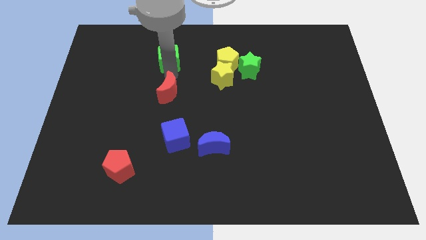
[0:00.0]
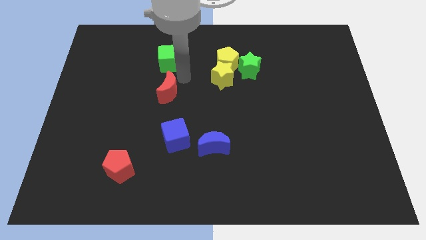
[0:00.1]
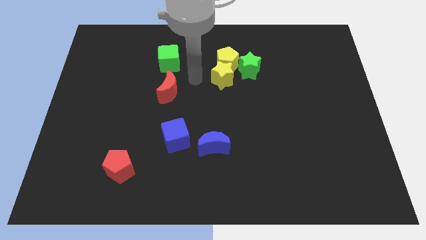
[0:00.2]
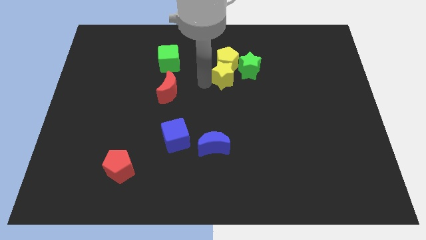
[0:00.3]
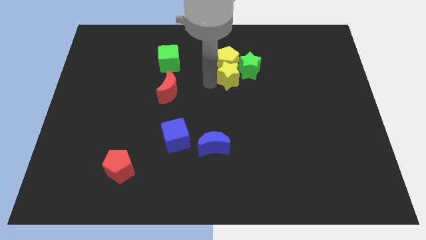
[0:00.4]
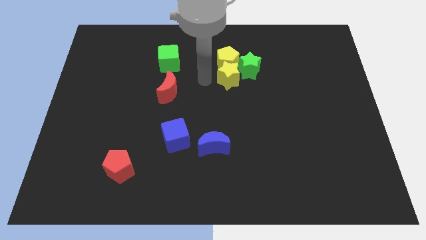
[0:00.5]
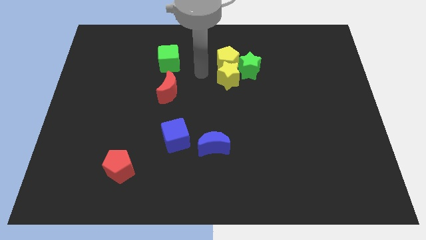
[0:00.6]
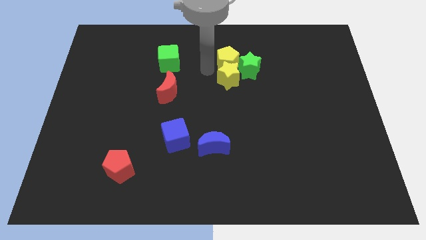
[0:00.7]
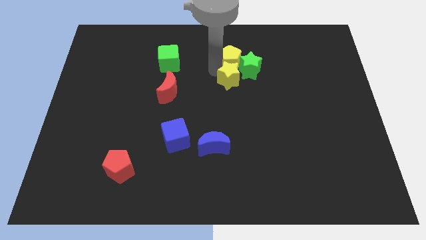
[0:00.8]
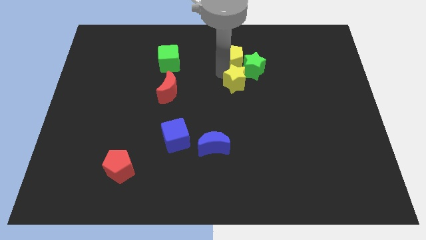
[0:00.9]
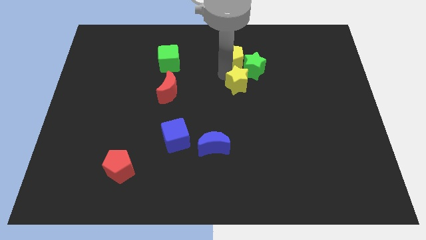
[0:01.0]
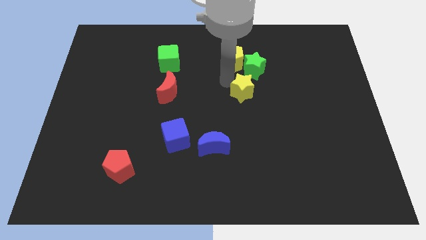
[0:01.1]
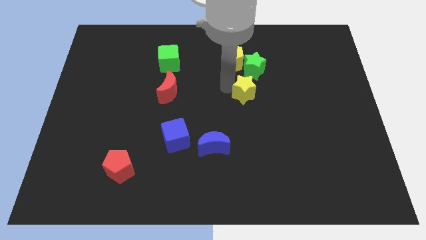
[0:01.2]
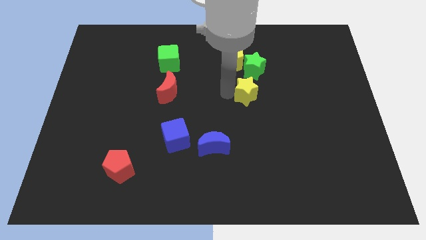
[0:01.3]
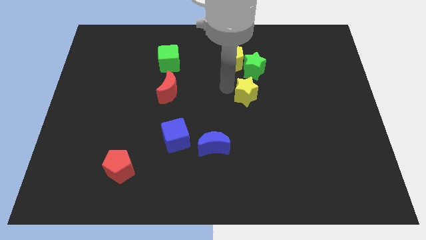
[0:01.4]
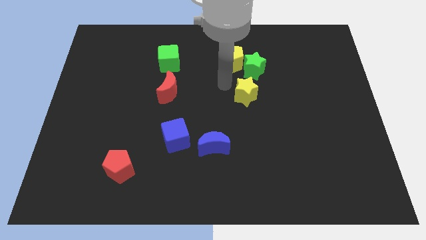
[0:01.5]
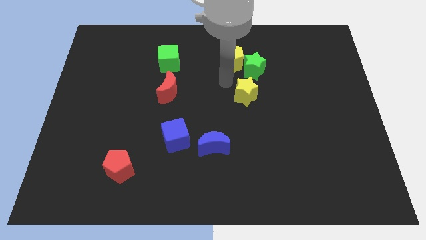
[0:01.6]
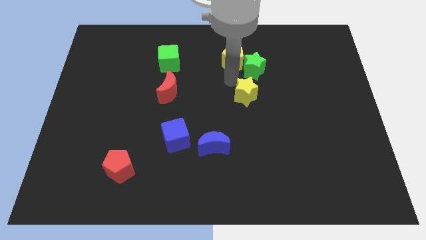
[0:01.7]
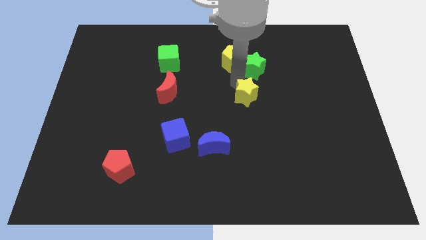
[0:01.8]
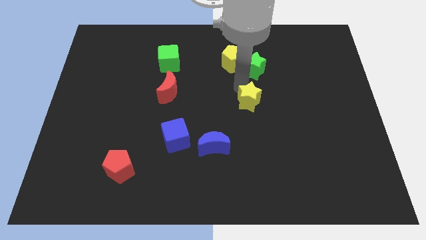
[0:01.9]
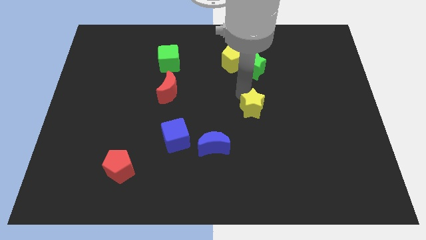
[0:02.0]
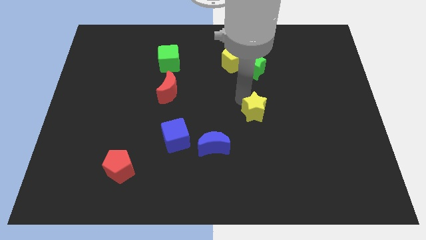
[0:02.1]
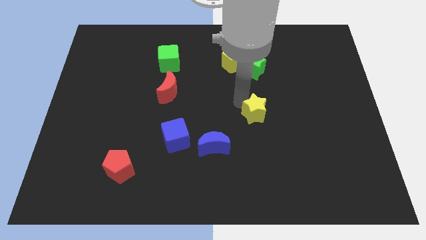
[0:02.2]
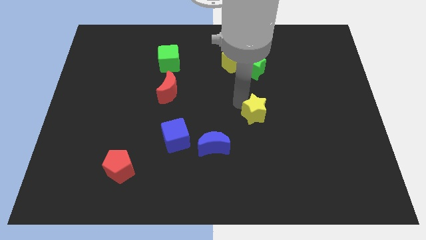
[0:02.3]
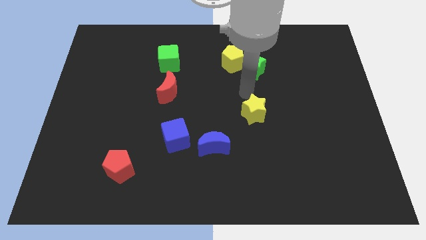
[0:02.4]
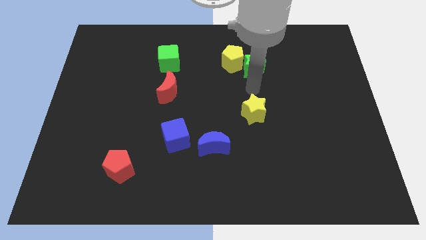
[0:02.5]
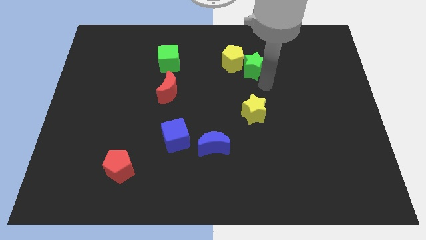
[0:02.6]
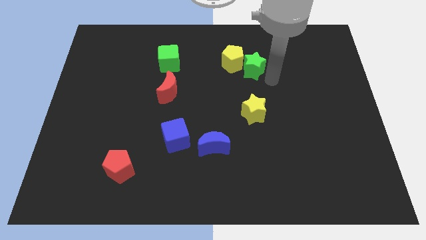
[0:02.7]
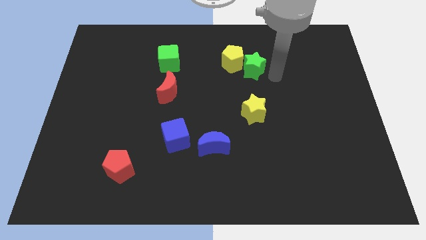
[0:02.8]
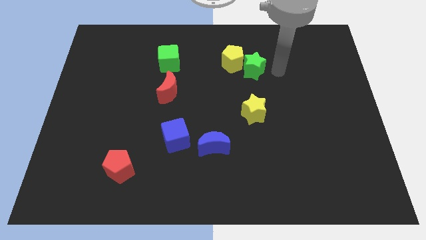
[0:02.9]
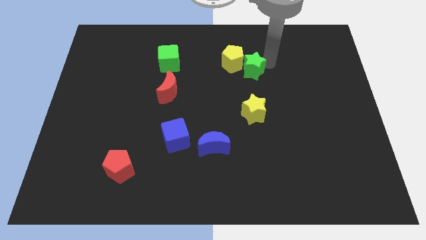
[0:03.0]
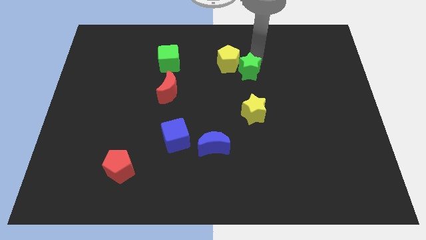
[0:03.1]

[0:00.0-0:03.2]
push the yellow star away from the yellow petagon

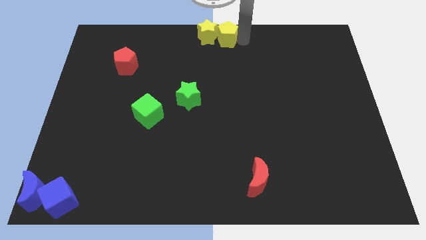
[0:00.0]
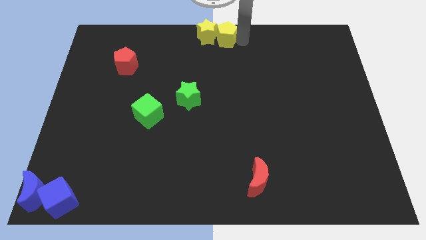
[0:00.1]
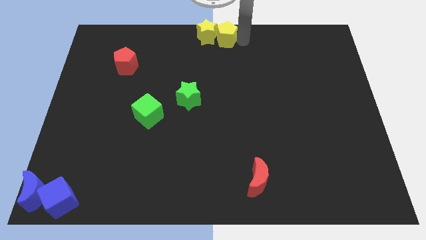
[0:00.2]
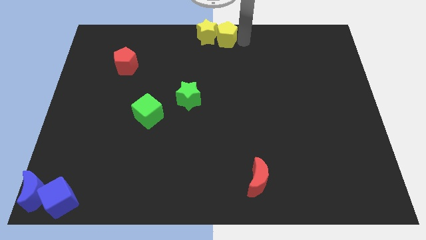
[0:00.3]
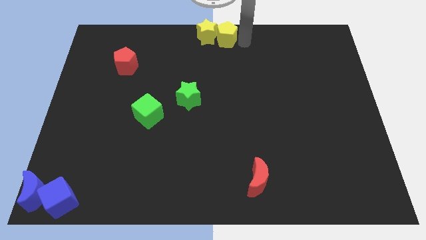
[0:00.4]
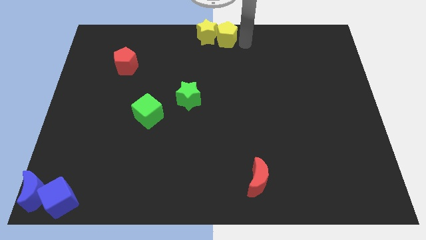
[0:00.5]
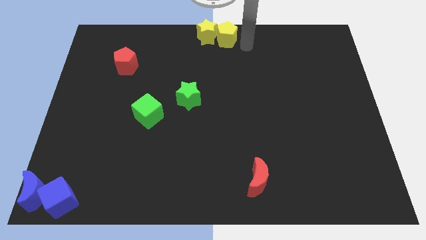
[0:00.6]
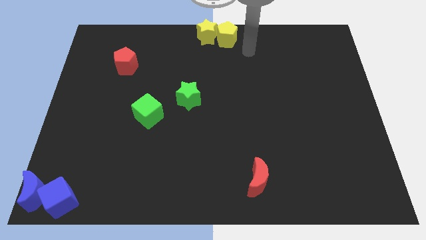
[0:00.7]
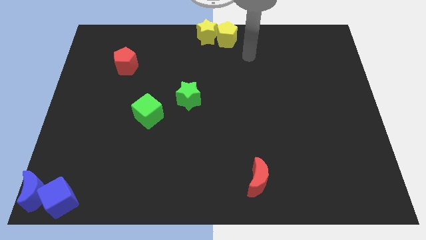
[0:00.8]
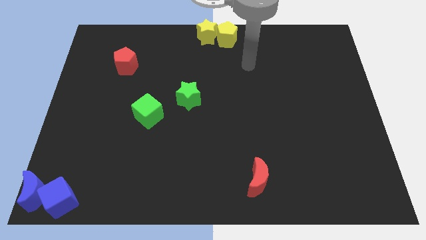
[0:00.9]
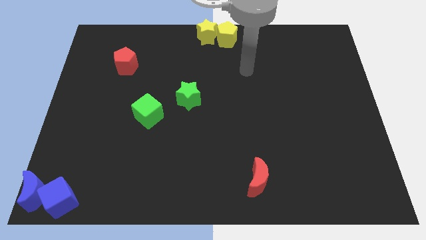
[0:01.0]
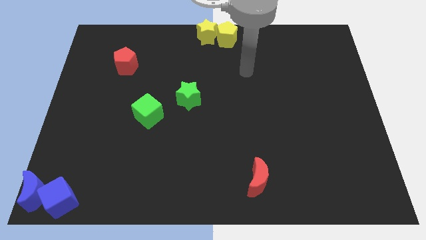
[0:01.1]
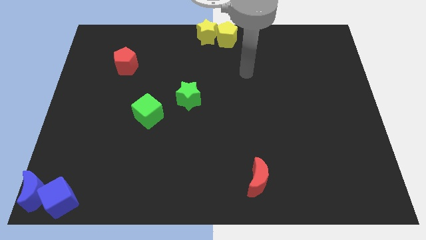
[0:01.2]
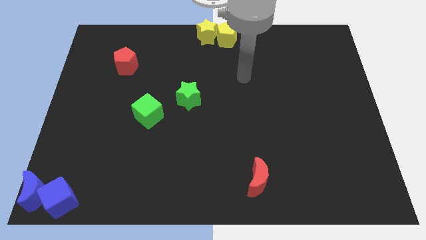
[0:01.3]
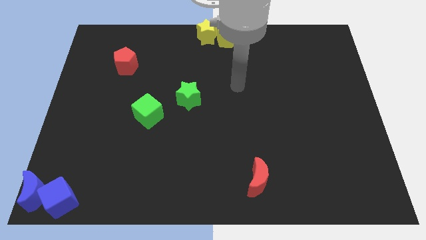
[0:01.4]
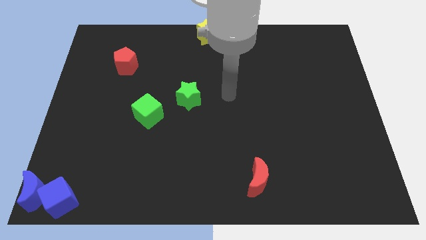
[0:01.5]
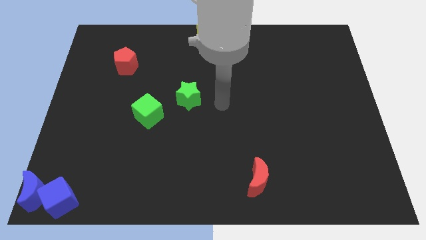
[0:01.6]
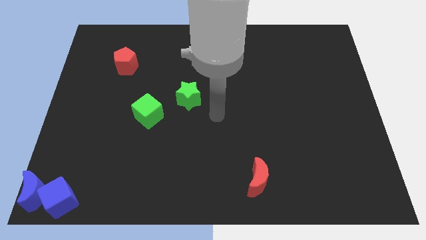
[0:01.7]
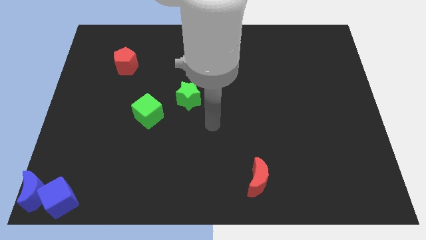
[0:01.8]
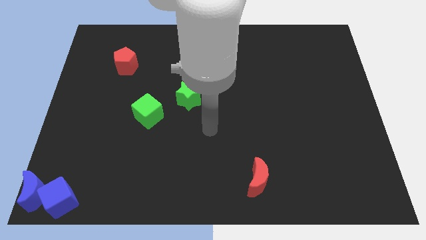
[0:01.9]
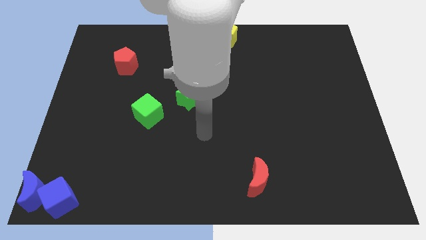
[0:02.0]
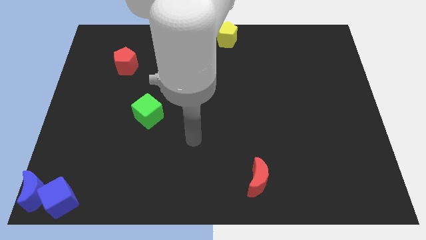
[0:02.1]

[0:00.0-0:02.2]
move the yellow star and yellow pentagon towards the top center of the board

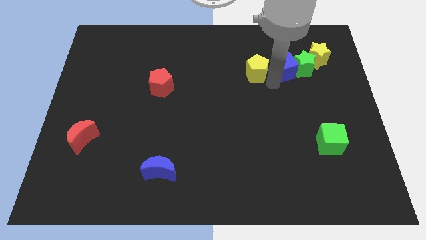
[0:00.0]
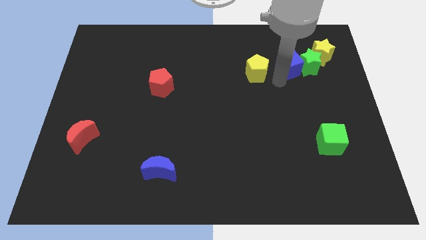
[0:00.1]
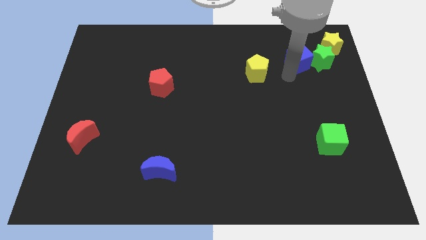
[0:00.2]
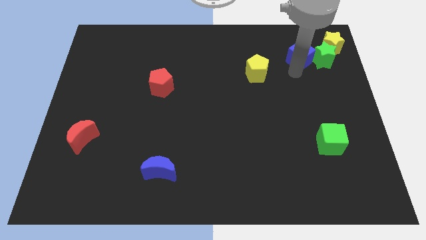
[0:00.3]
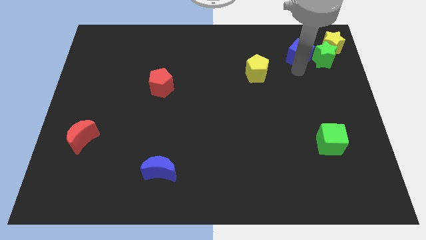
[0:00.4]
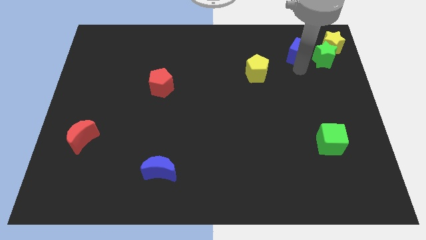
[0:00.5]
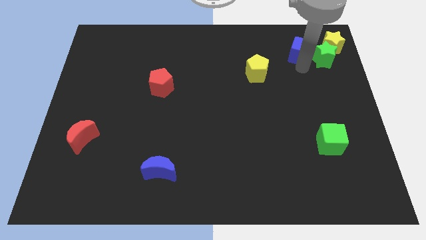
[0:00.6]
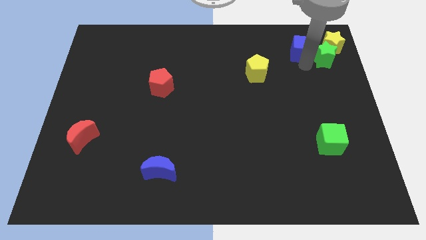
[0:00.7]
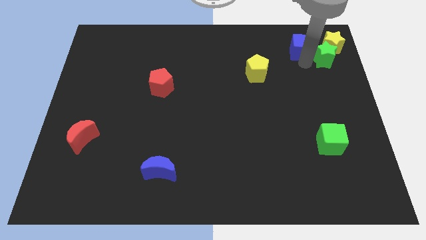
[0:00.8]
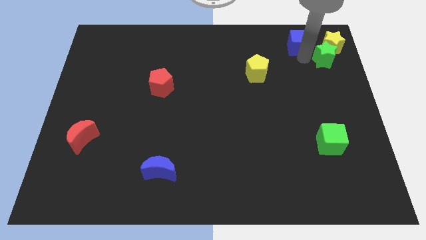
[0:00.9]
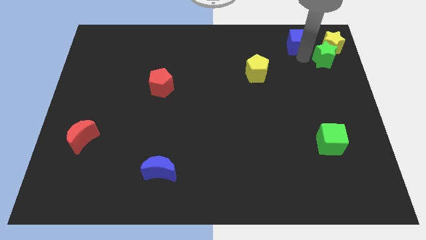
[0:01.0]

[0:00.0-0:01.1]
separate the blue cube and green star

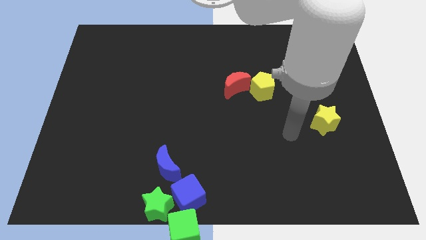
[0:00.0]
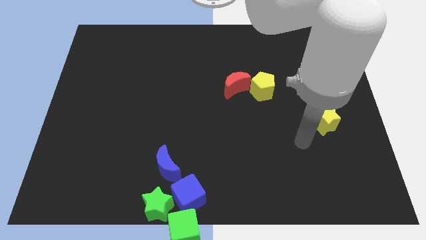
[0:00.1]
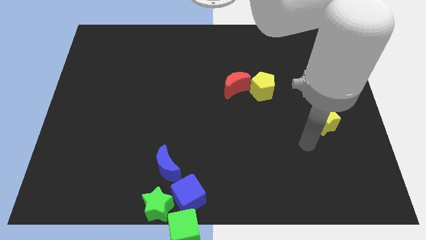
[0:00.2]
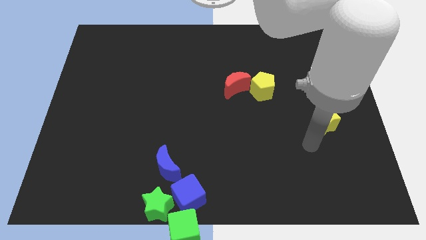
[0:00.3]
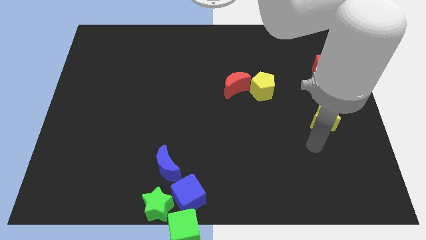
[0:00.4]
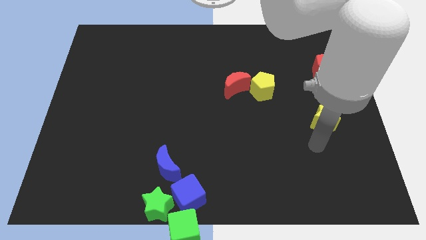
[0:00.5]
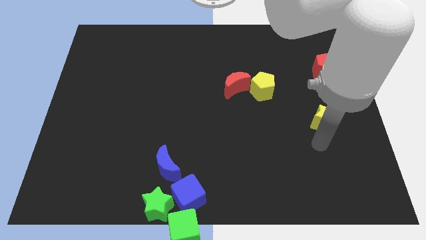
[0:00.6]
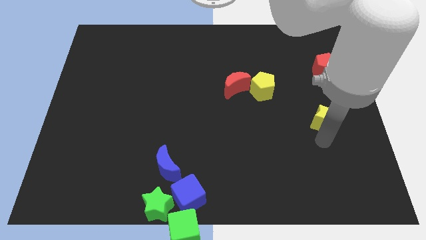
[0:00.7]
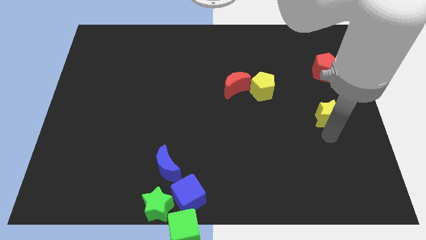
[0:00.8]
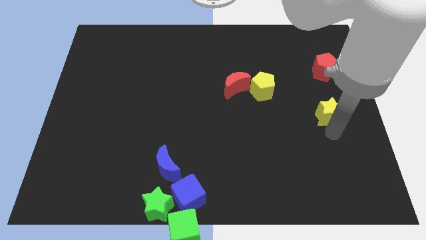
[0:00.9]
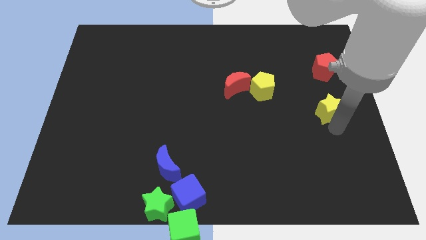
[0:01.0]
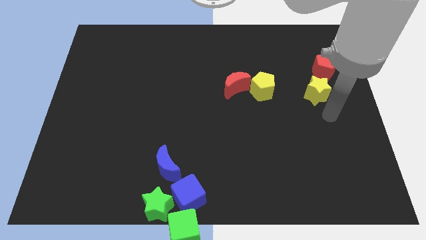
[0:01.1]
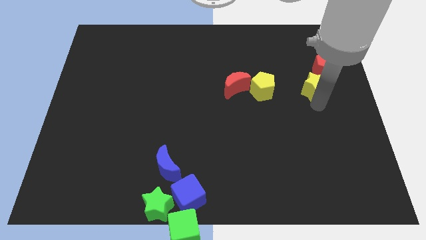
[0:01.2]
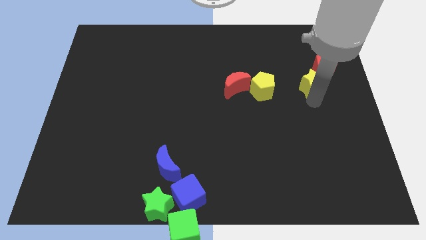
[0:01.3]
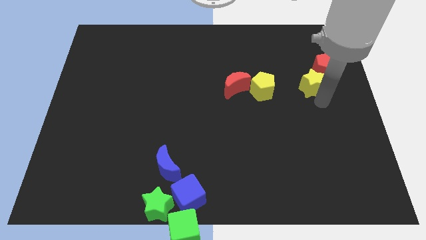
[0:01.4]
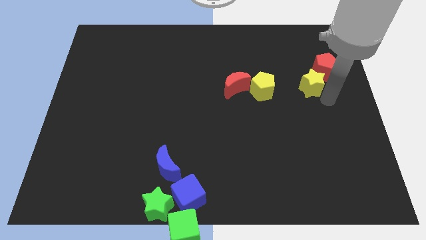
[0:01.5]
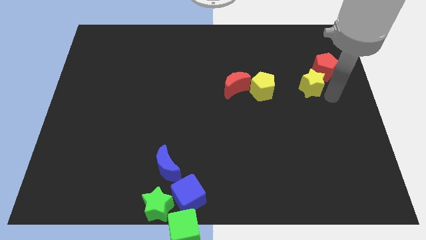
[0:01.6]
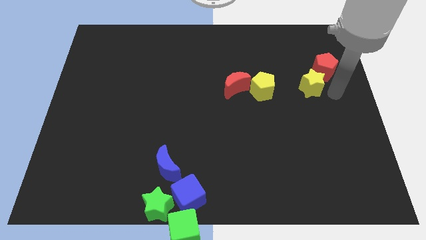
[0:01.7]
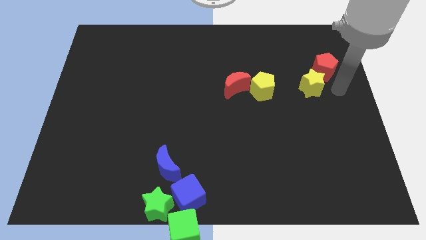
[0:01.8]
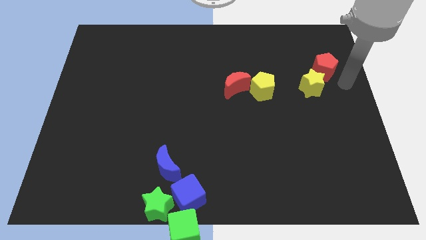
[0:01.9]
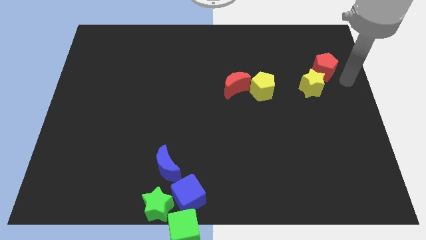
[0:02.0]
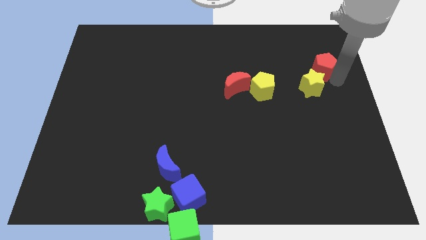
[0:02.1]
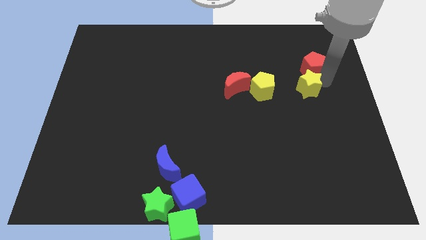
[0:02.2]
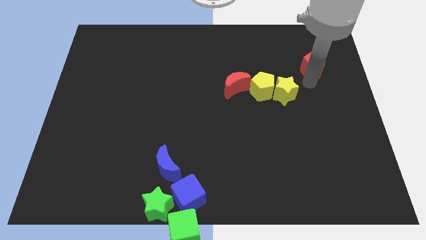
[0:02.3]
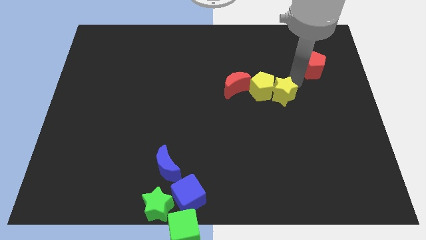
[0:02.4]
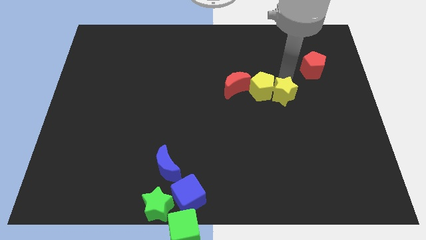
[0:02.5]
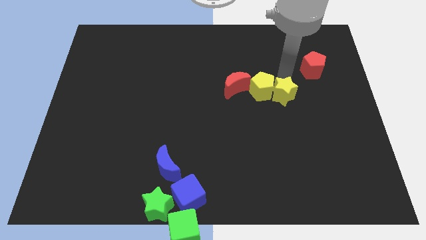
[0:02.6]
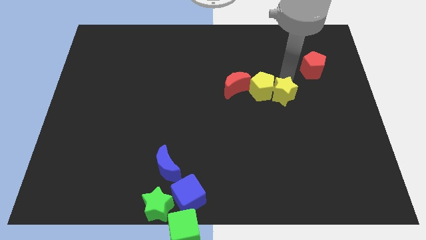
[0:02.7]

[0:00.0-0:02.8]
move the yellow star to the right side of the yellow pentagon
